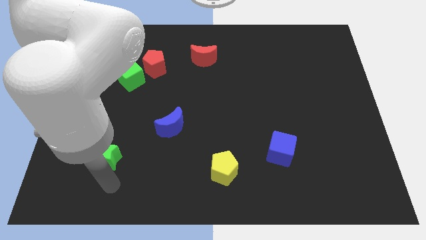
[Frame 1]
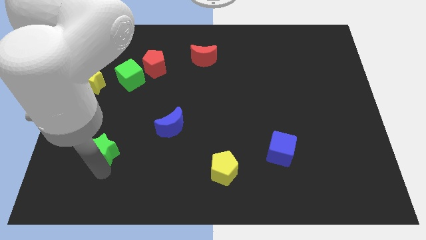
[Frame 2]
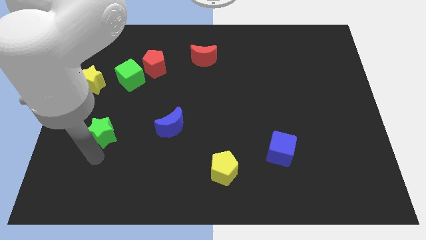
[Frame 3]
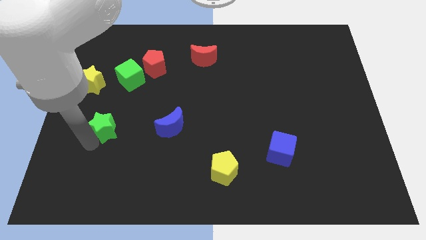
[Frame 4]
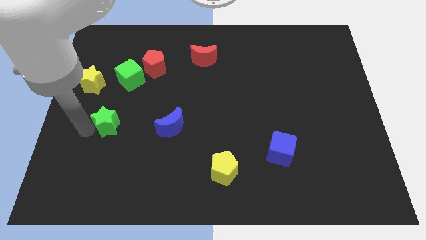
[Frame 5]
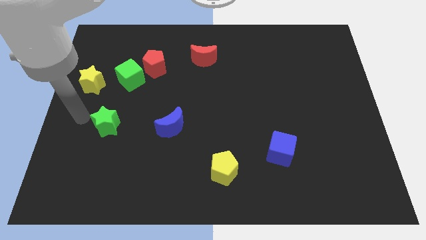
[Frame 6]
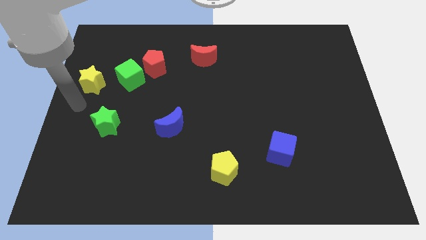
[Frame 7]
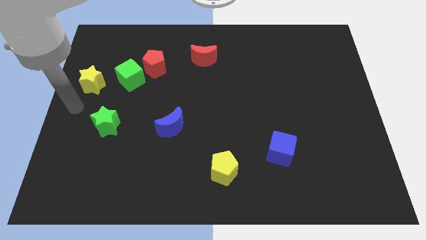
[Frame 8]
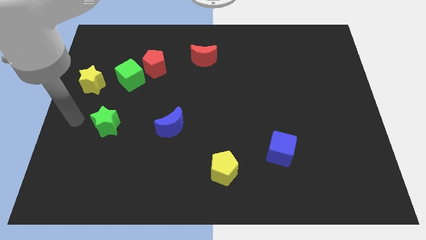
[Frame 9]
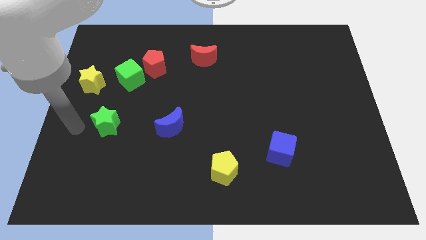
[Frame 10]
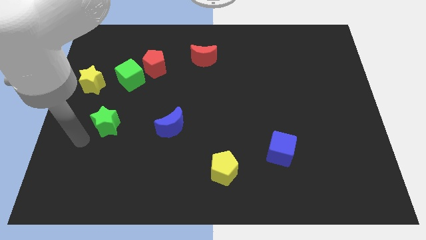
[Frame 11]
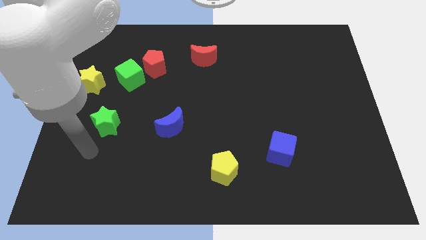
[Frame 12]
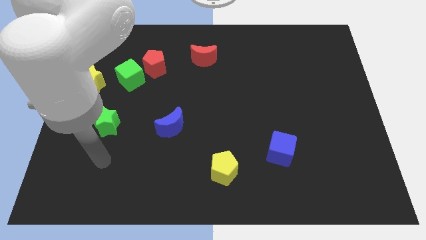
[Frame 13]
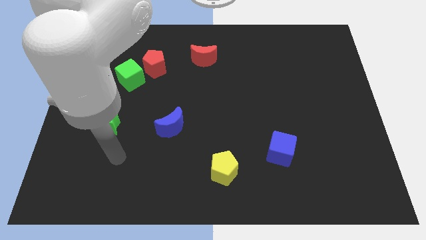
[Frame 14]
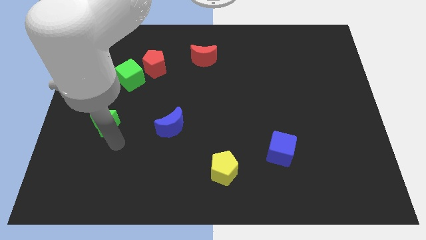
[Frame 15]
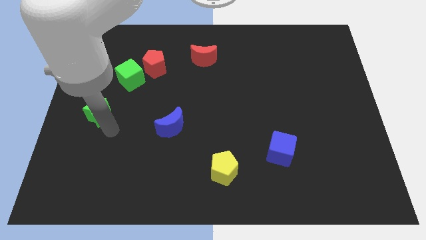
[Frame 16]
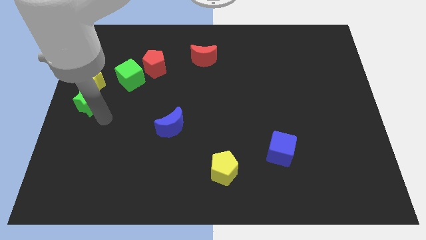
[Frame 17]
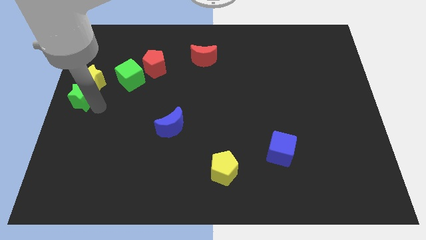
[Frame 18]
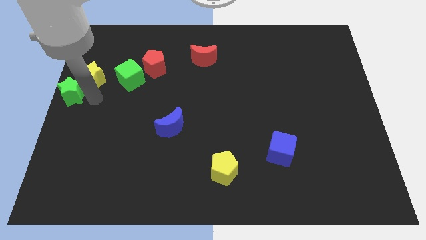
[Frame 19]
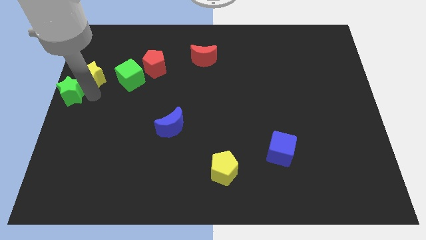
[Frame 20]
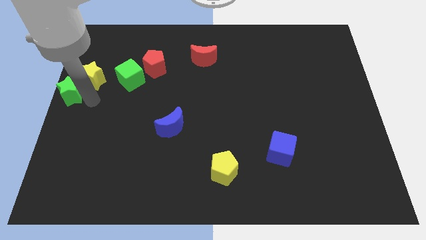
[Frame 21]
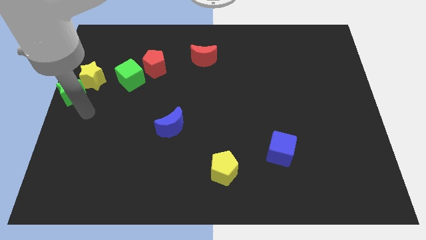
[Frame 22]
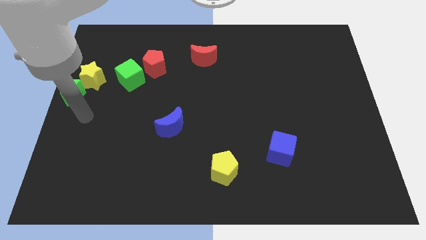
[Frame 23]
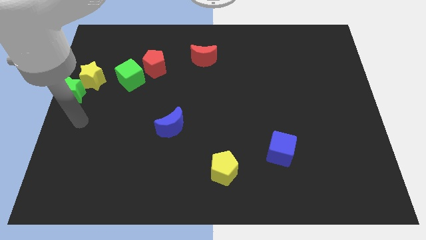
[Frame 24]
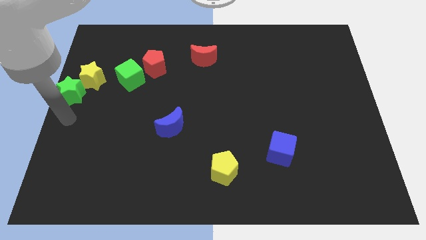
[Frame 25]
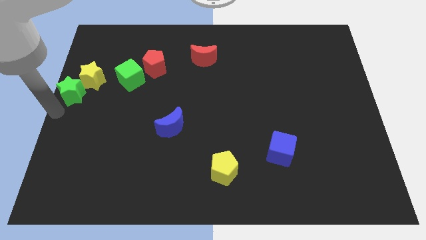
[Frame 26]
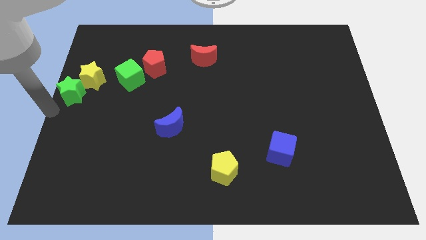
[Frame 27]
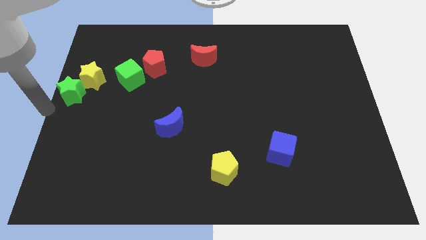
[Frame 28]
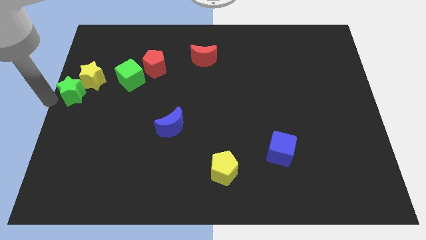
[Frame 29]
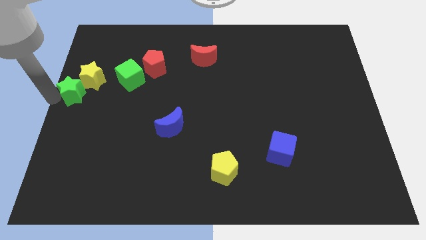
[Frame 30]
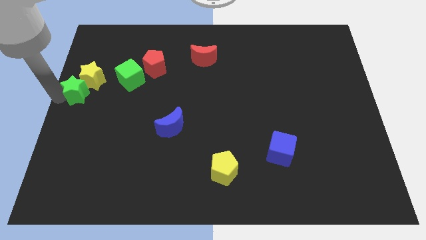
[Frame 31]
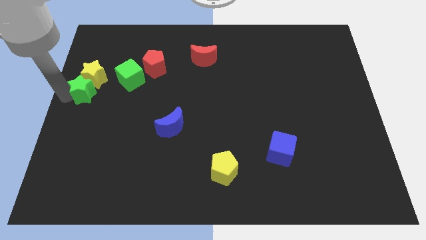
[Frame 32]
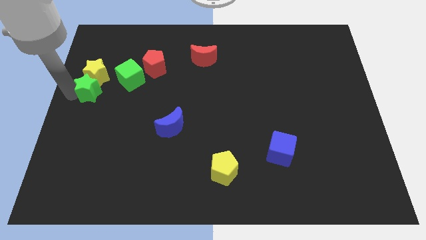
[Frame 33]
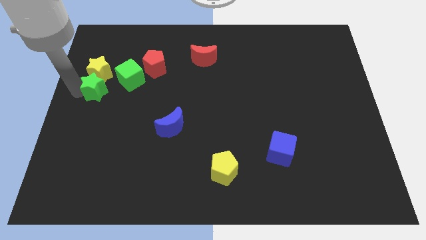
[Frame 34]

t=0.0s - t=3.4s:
push the green star to the bottom side of the yellow star

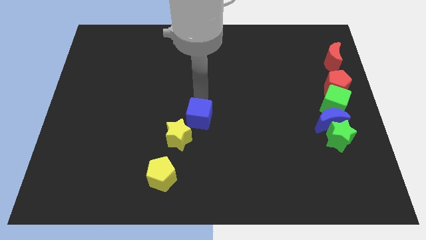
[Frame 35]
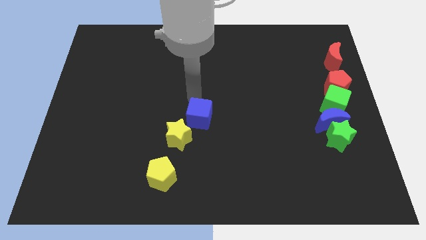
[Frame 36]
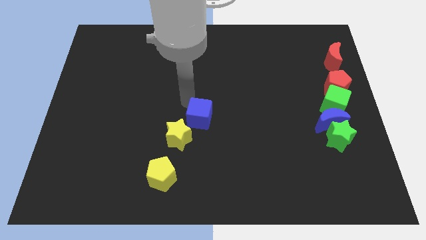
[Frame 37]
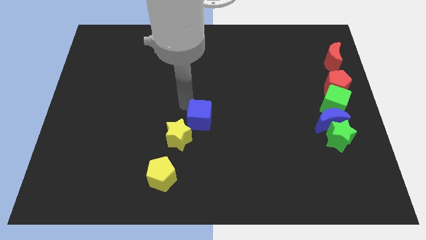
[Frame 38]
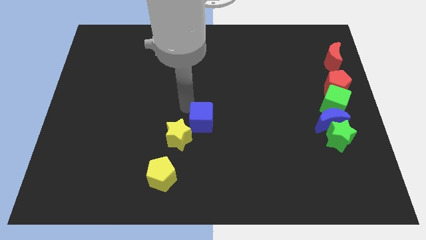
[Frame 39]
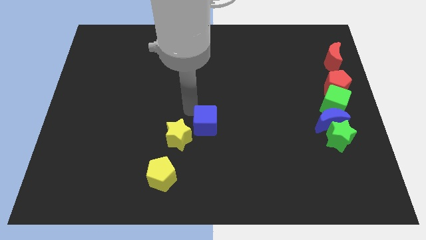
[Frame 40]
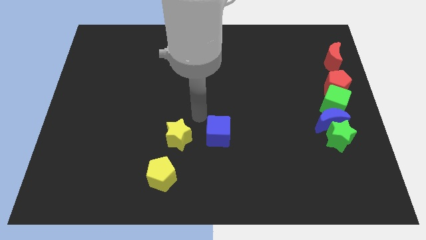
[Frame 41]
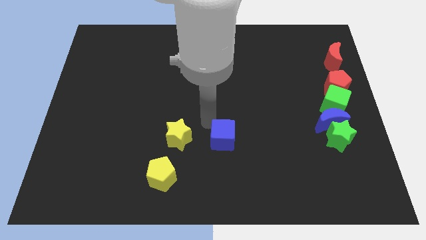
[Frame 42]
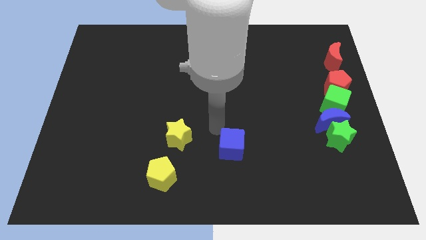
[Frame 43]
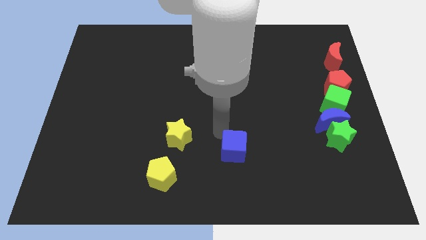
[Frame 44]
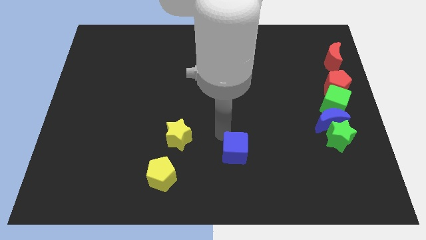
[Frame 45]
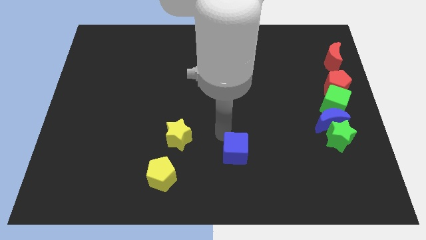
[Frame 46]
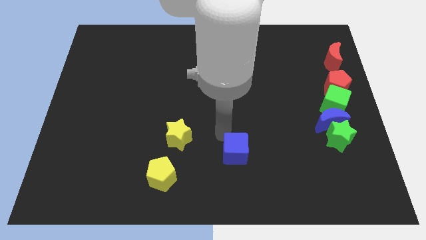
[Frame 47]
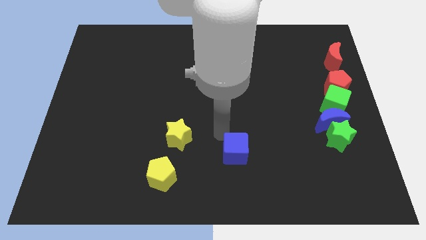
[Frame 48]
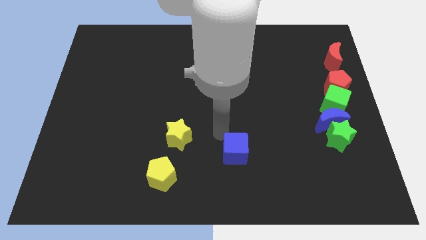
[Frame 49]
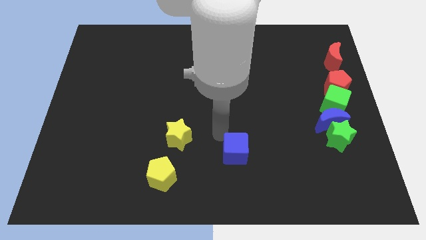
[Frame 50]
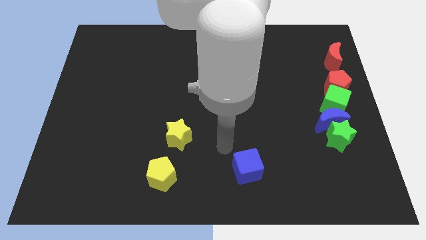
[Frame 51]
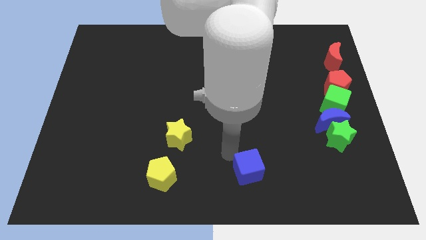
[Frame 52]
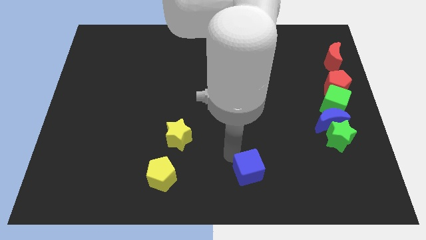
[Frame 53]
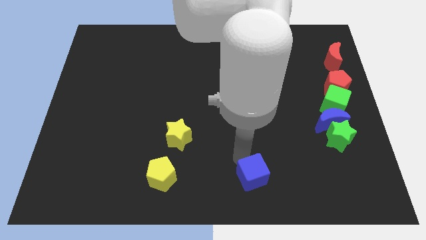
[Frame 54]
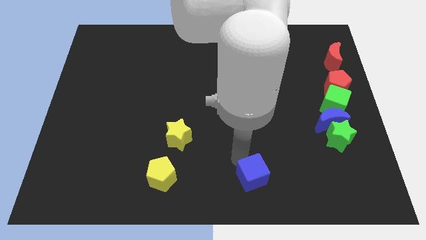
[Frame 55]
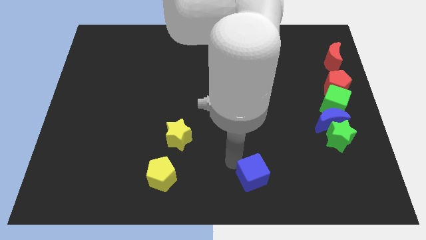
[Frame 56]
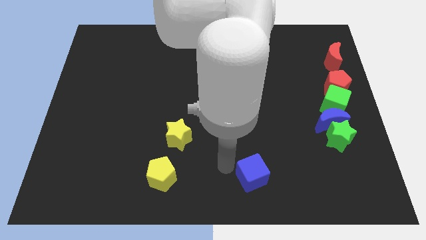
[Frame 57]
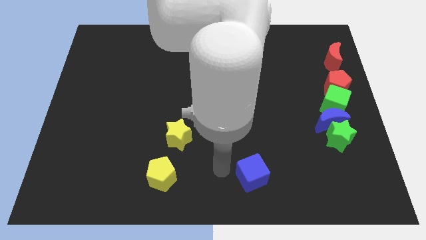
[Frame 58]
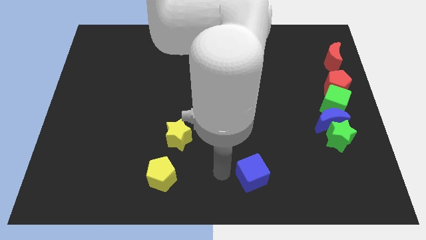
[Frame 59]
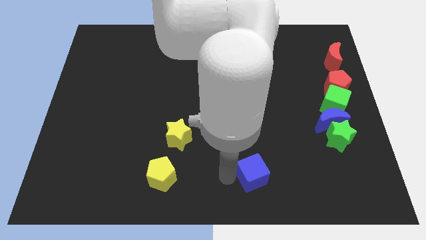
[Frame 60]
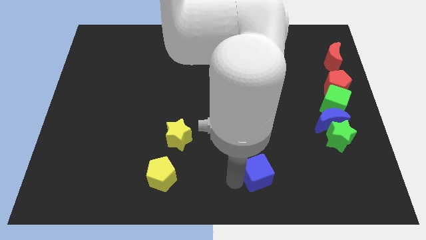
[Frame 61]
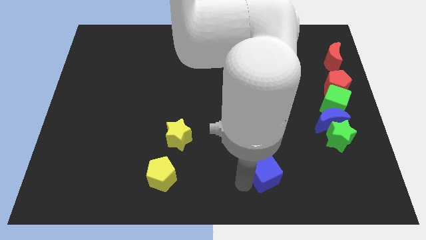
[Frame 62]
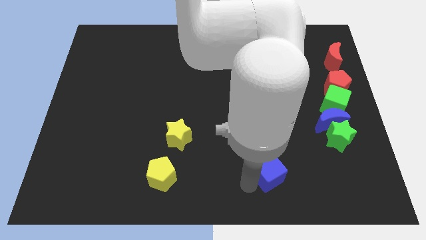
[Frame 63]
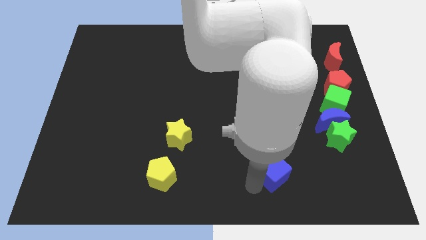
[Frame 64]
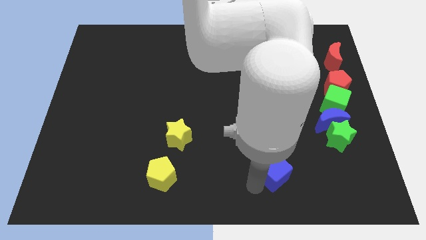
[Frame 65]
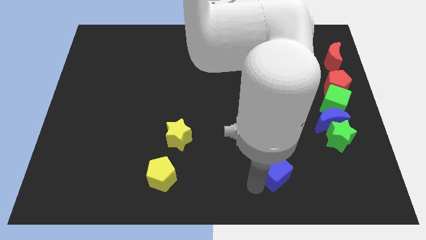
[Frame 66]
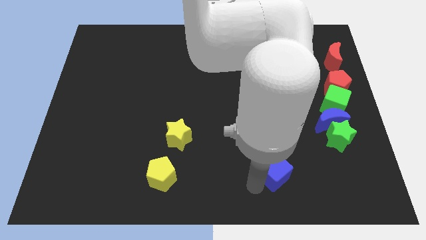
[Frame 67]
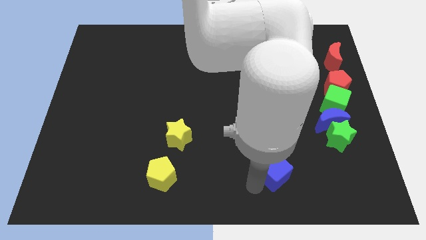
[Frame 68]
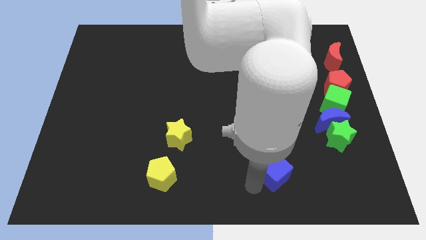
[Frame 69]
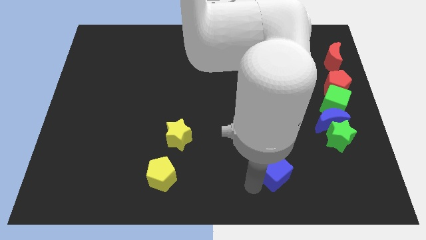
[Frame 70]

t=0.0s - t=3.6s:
push the blue cube horizontally to the right side of the yellow pentagon

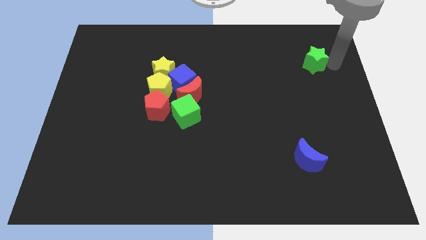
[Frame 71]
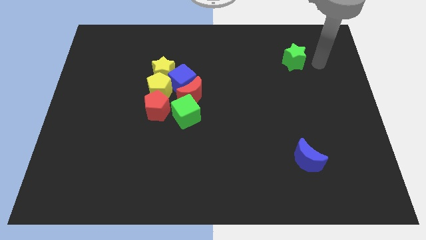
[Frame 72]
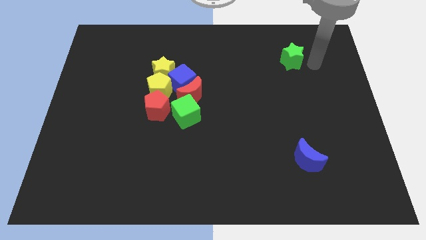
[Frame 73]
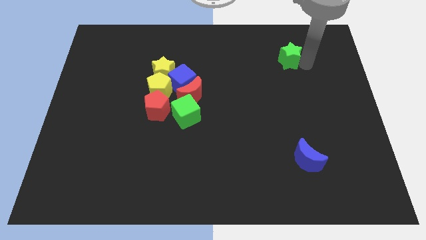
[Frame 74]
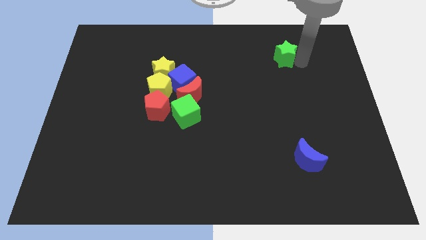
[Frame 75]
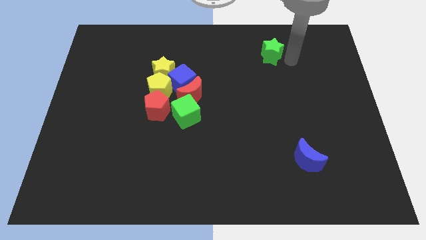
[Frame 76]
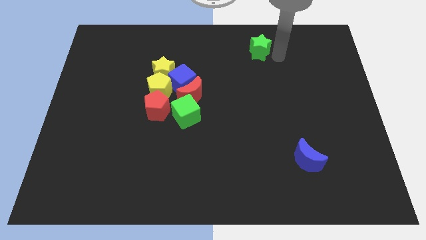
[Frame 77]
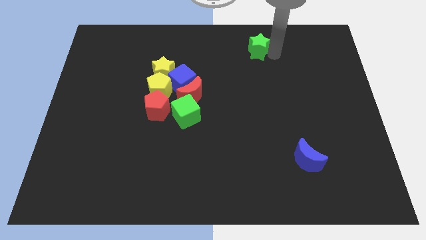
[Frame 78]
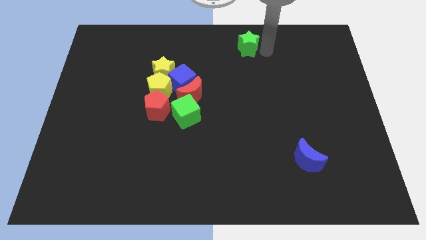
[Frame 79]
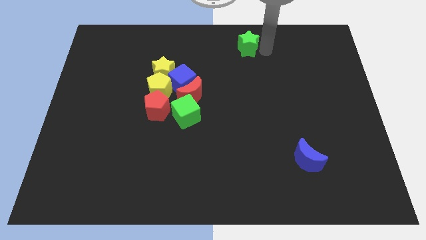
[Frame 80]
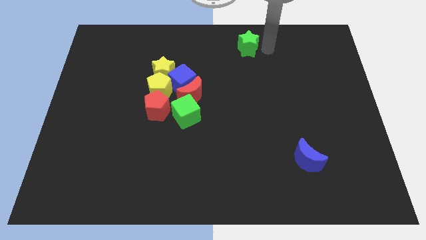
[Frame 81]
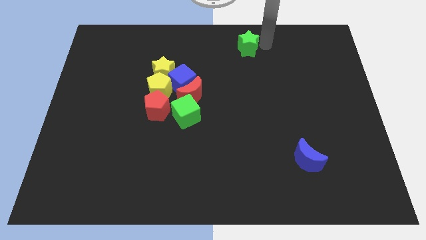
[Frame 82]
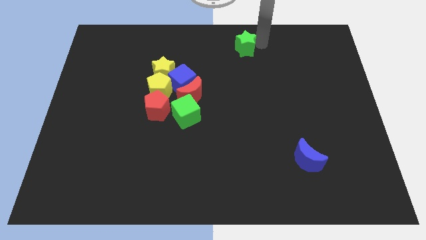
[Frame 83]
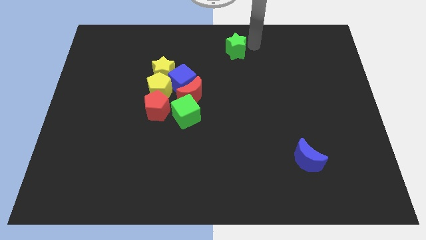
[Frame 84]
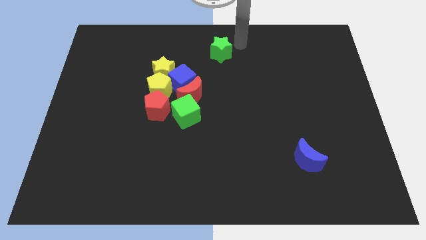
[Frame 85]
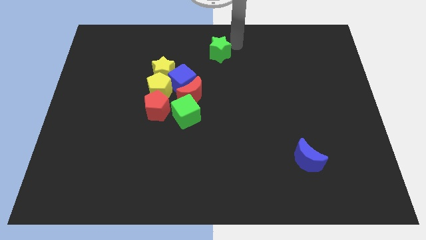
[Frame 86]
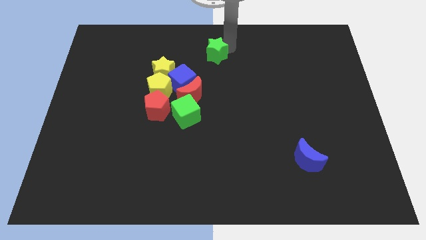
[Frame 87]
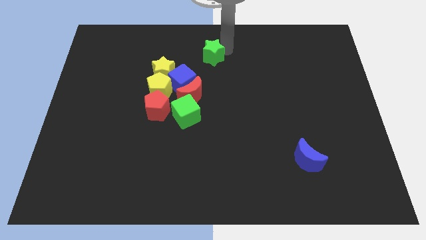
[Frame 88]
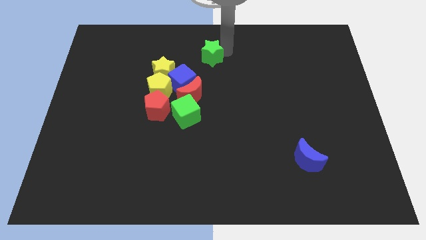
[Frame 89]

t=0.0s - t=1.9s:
push the green star towards the top center of board
